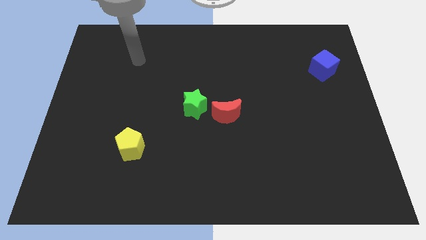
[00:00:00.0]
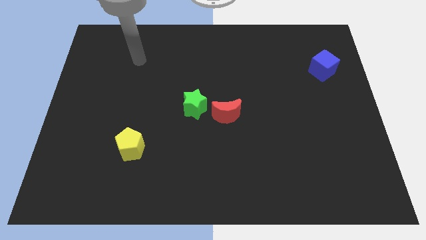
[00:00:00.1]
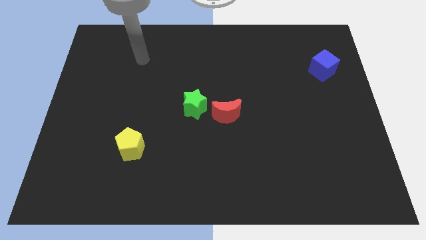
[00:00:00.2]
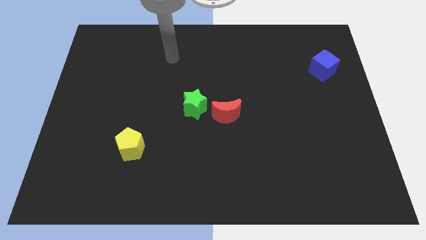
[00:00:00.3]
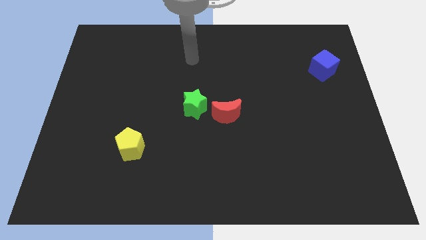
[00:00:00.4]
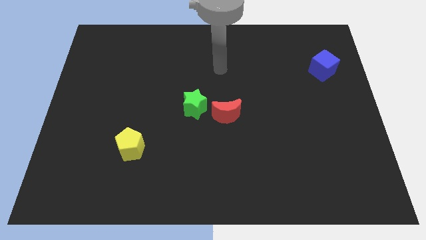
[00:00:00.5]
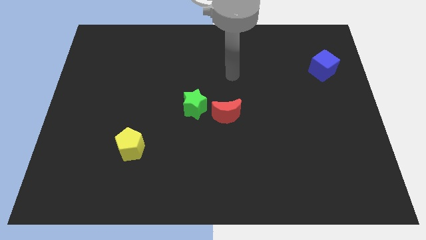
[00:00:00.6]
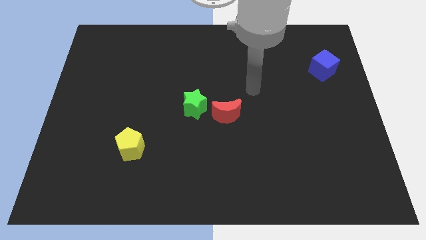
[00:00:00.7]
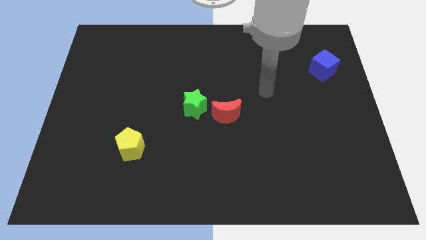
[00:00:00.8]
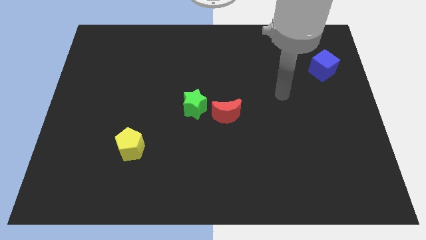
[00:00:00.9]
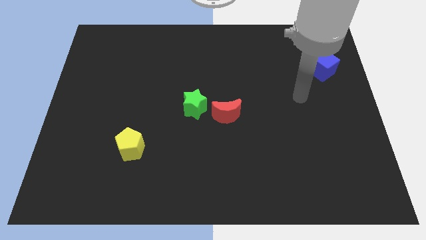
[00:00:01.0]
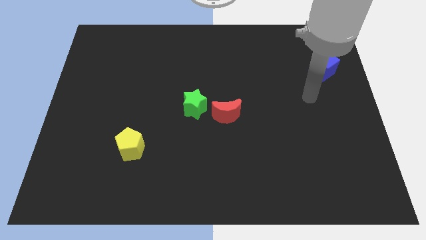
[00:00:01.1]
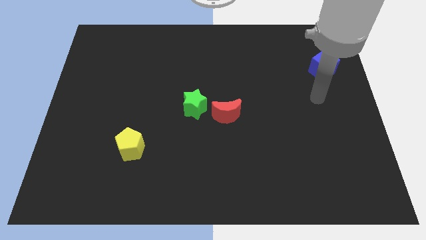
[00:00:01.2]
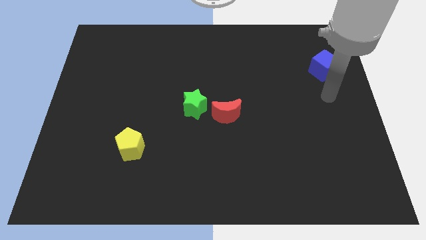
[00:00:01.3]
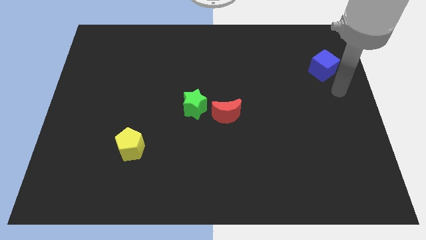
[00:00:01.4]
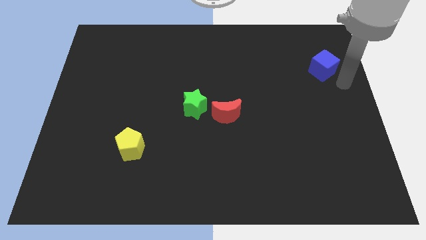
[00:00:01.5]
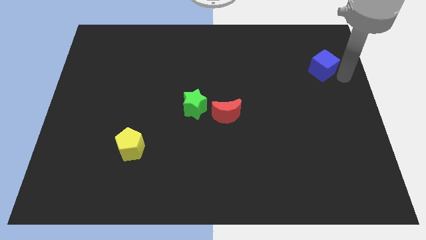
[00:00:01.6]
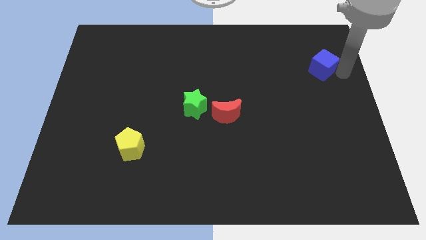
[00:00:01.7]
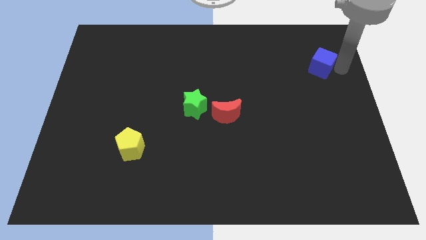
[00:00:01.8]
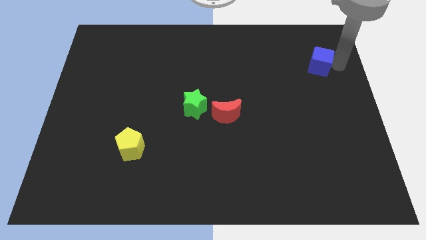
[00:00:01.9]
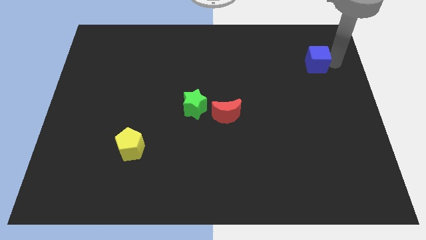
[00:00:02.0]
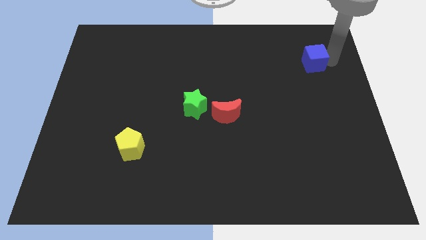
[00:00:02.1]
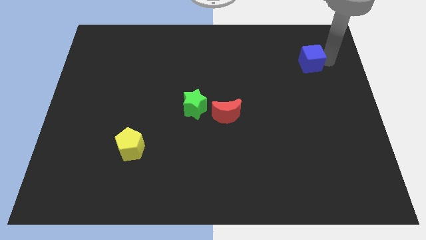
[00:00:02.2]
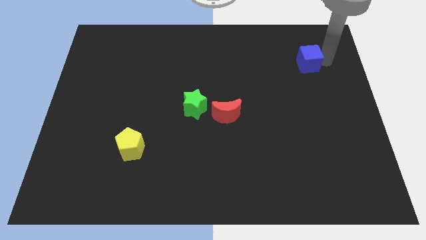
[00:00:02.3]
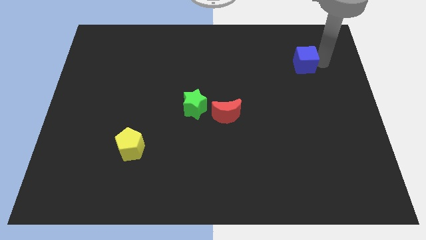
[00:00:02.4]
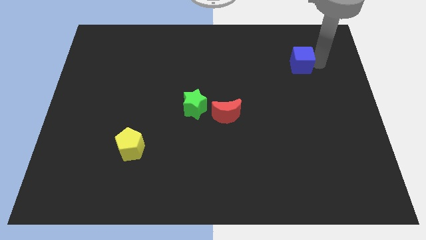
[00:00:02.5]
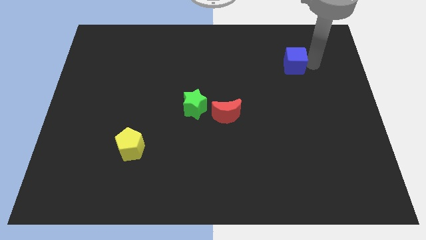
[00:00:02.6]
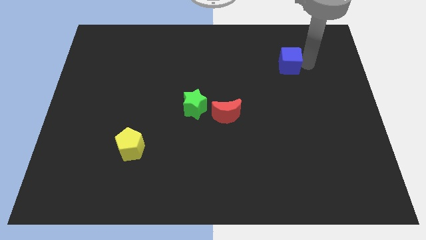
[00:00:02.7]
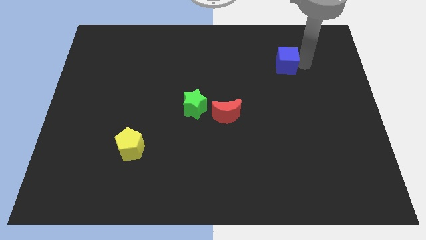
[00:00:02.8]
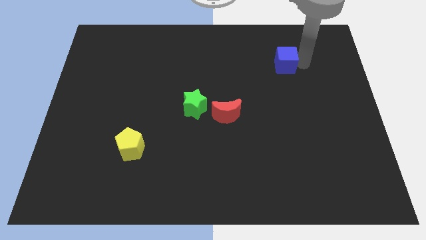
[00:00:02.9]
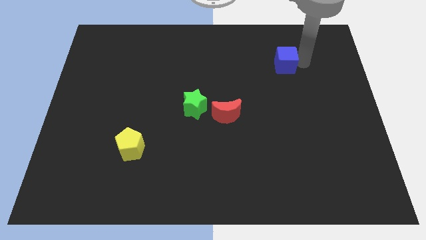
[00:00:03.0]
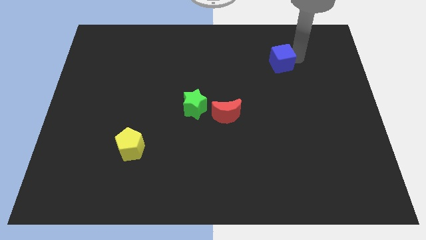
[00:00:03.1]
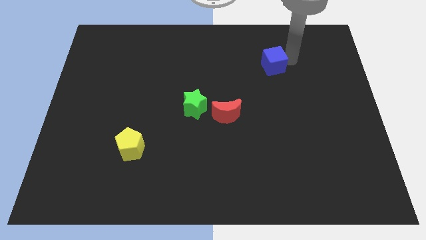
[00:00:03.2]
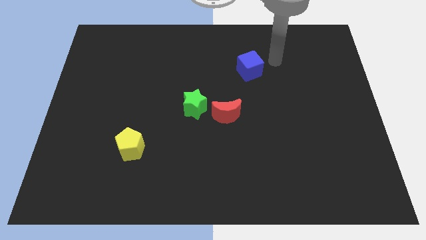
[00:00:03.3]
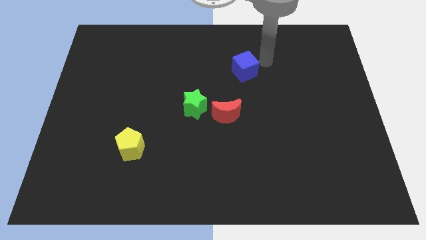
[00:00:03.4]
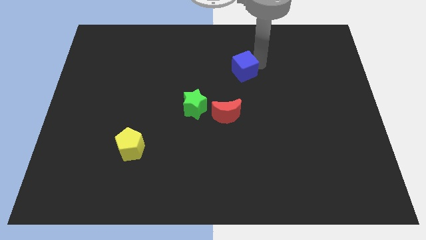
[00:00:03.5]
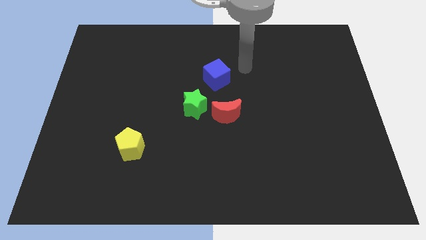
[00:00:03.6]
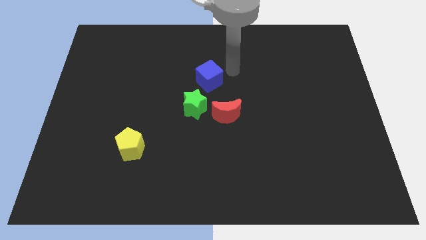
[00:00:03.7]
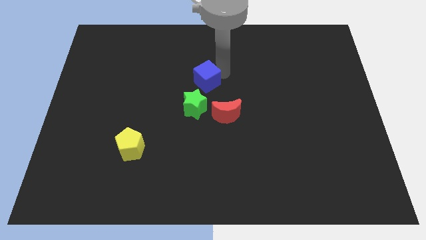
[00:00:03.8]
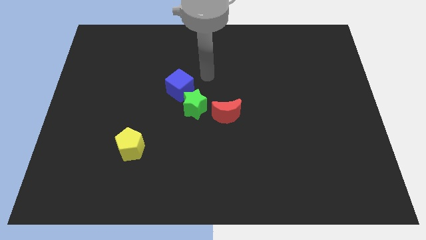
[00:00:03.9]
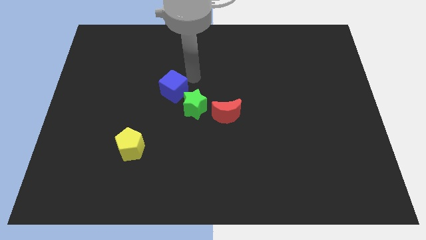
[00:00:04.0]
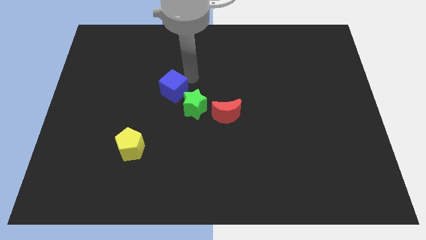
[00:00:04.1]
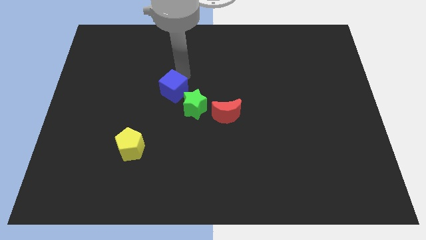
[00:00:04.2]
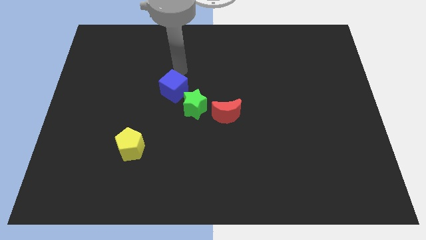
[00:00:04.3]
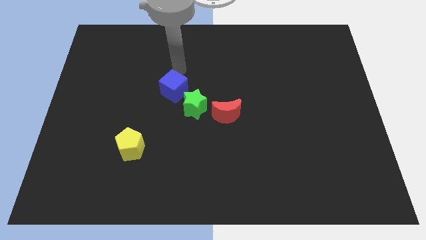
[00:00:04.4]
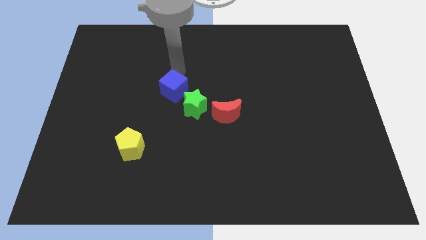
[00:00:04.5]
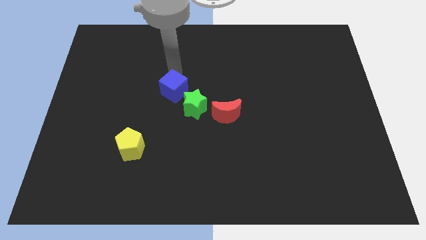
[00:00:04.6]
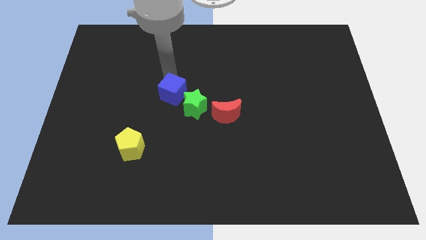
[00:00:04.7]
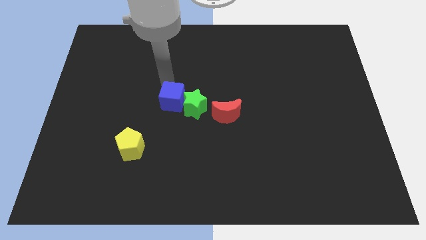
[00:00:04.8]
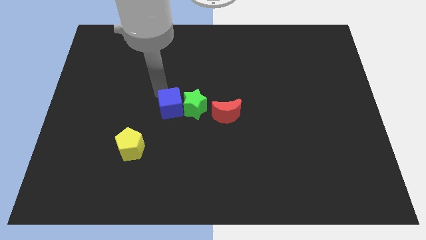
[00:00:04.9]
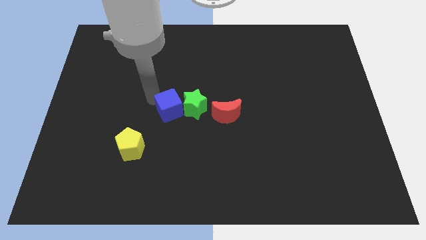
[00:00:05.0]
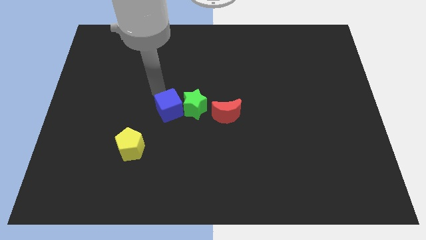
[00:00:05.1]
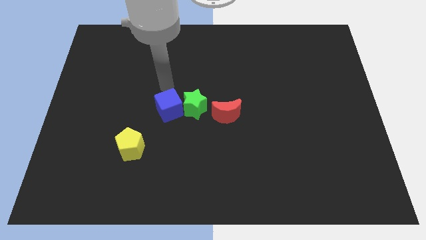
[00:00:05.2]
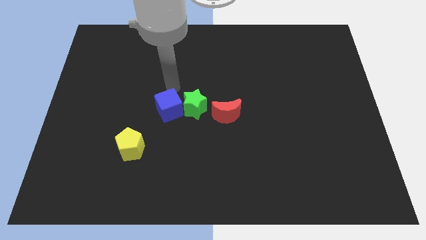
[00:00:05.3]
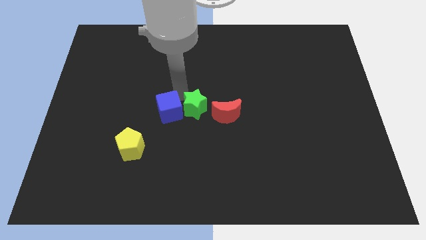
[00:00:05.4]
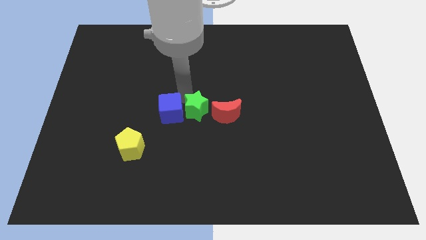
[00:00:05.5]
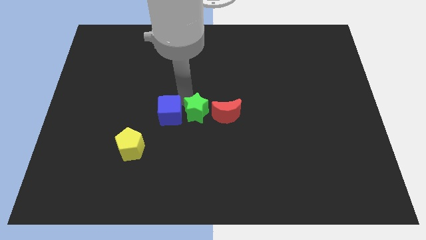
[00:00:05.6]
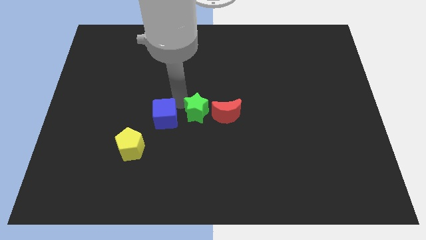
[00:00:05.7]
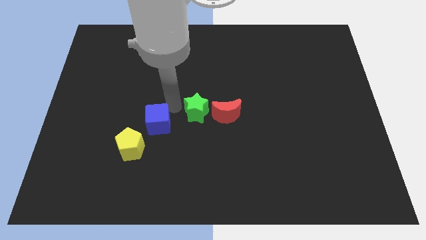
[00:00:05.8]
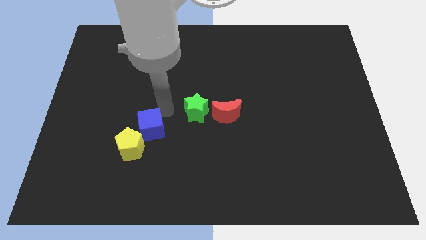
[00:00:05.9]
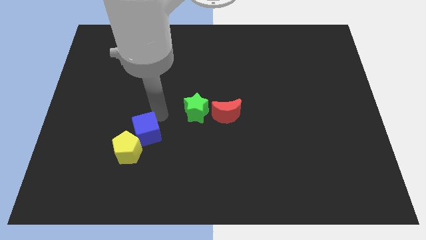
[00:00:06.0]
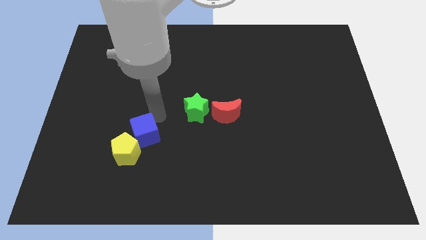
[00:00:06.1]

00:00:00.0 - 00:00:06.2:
move the cube next to the pentagon

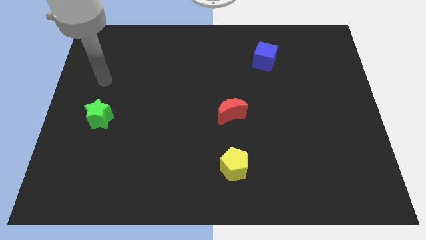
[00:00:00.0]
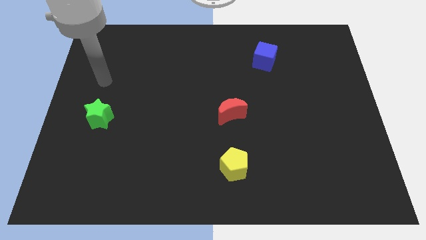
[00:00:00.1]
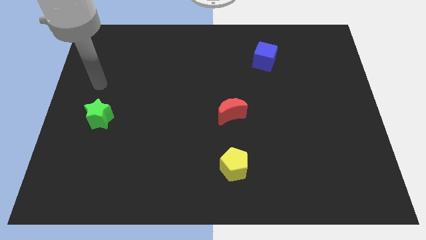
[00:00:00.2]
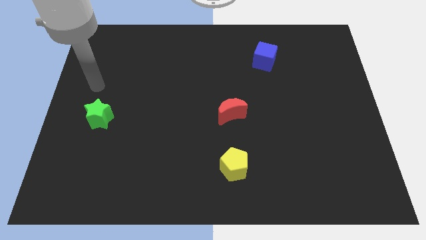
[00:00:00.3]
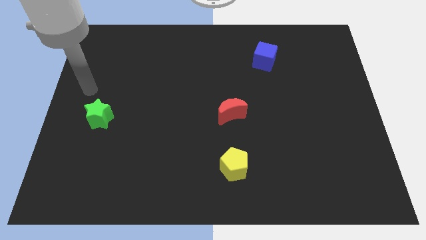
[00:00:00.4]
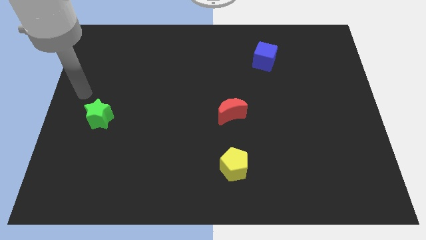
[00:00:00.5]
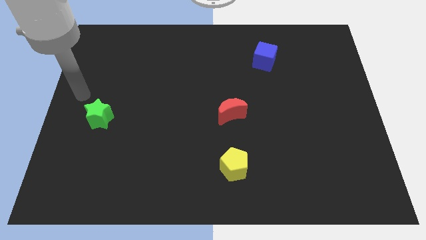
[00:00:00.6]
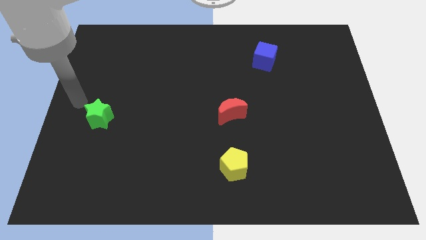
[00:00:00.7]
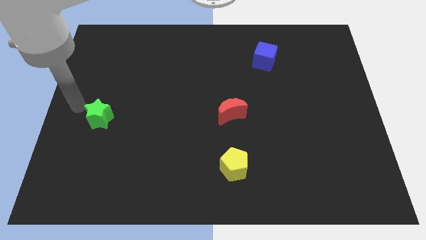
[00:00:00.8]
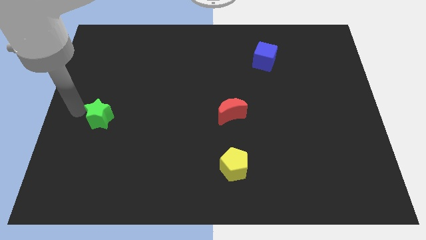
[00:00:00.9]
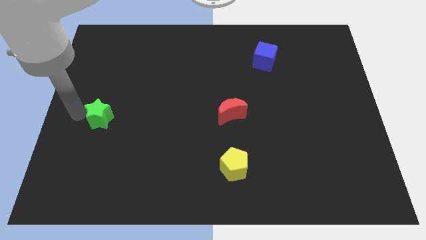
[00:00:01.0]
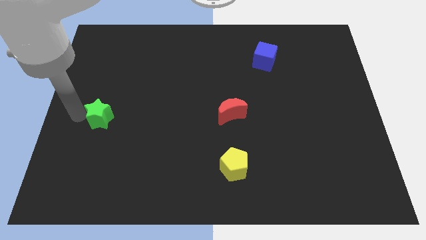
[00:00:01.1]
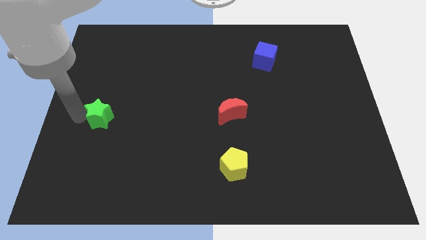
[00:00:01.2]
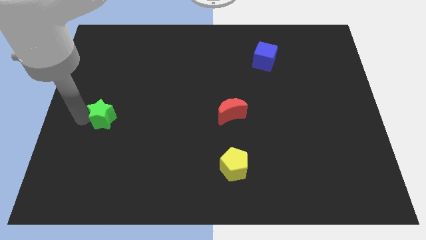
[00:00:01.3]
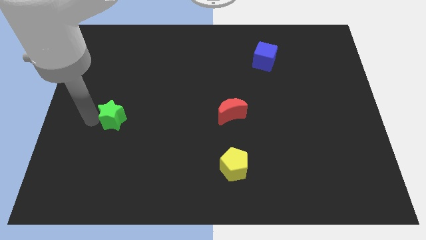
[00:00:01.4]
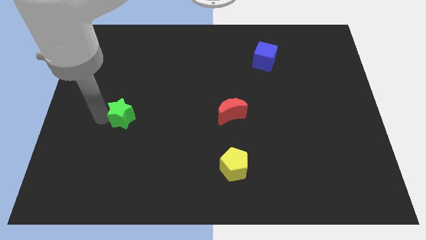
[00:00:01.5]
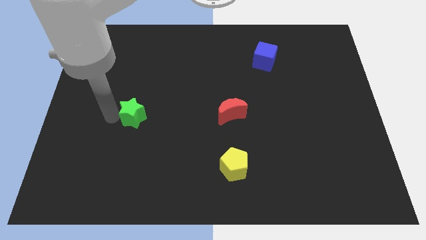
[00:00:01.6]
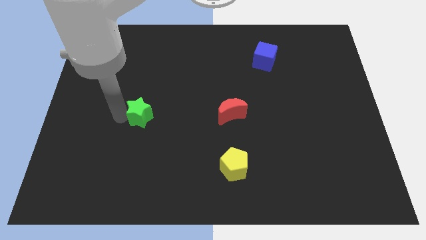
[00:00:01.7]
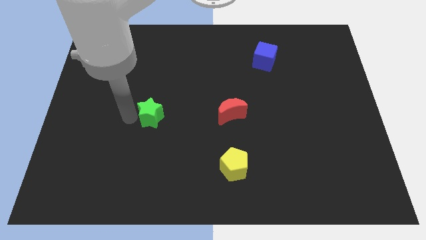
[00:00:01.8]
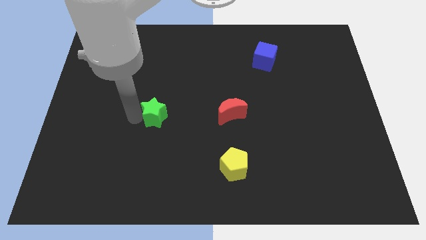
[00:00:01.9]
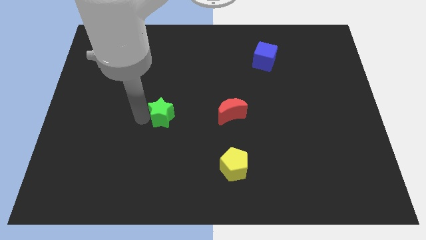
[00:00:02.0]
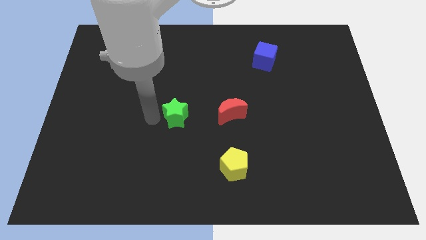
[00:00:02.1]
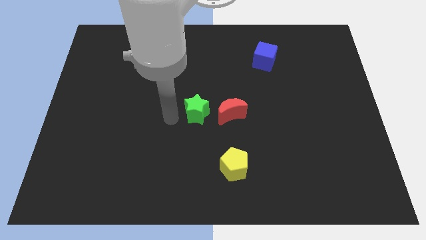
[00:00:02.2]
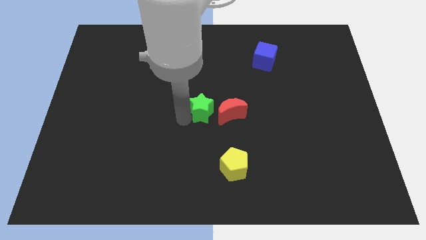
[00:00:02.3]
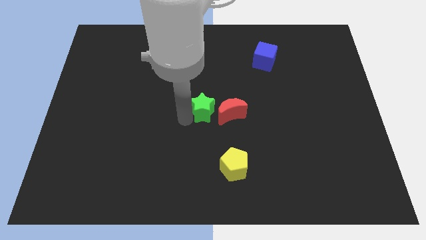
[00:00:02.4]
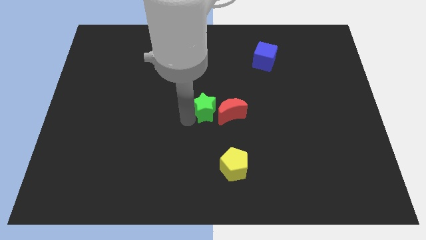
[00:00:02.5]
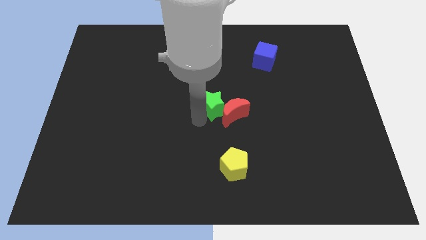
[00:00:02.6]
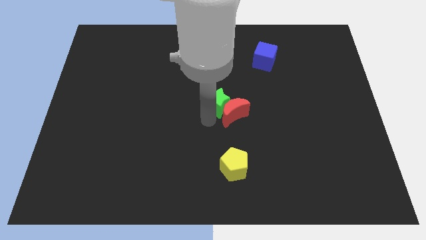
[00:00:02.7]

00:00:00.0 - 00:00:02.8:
move the star close to the red block
